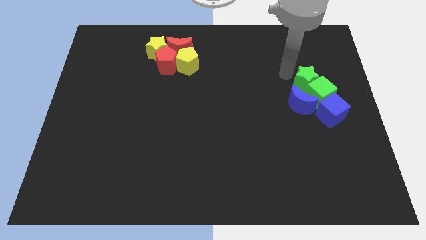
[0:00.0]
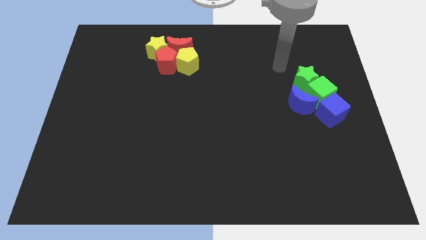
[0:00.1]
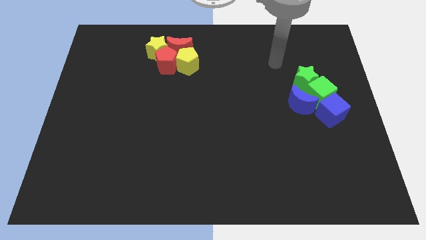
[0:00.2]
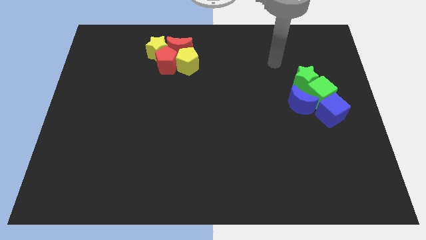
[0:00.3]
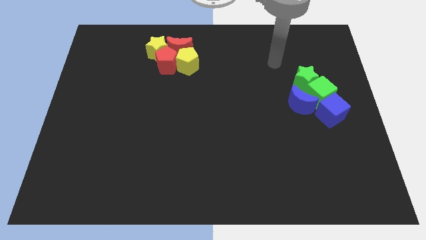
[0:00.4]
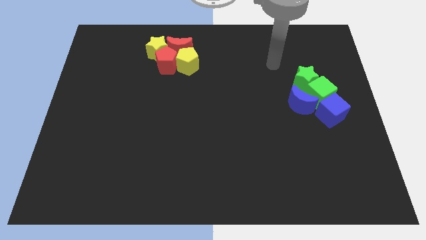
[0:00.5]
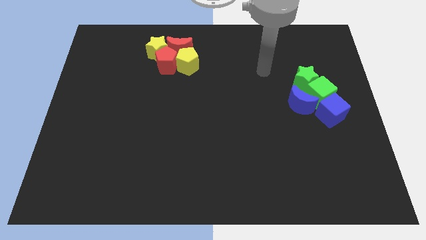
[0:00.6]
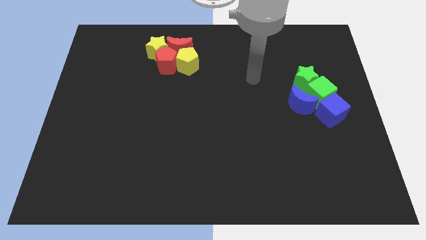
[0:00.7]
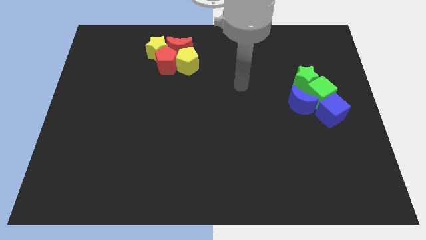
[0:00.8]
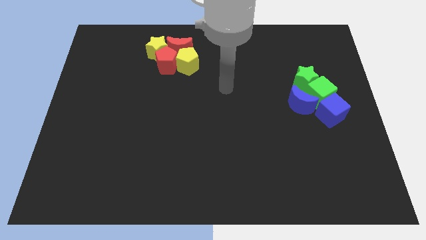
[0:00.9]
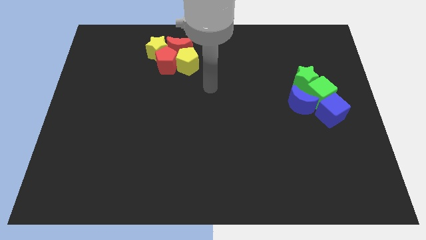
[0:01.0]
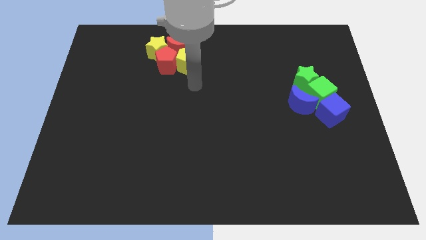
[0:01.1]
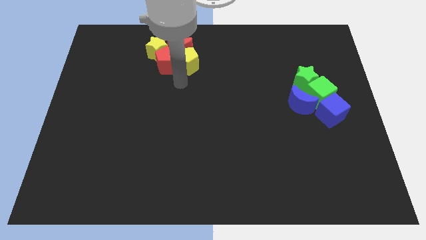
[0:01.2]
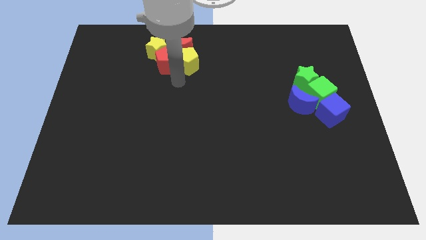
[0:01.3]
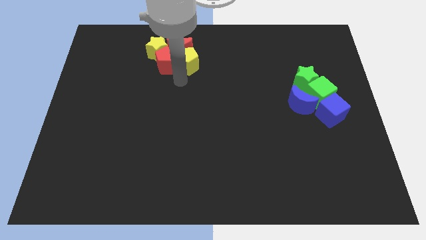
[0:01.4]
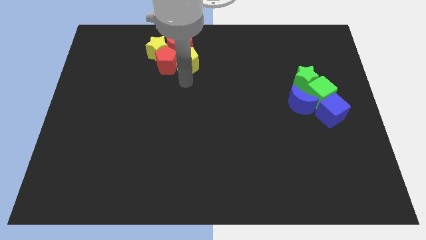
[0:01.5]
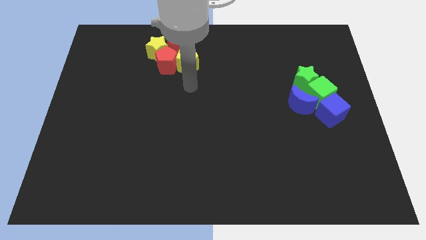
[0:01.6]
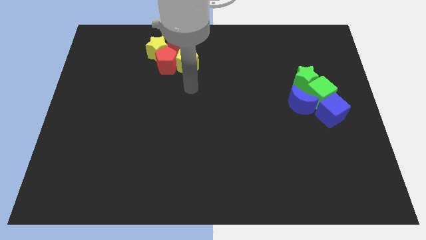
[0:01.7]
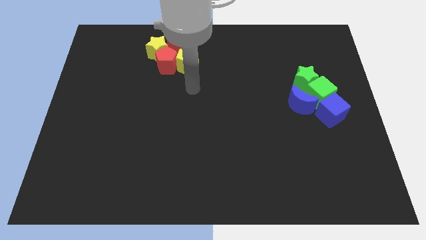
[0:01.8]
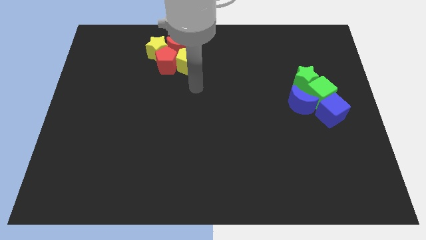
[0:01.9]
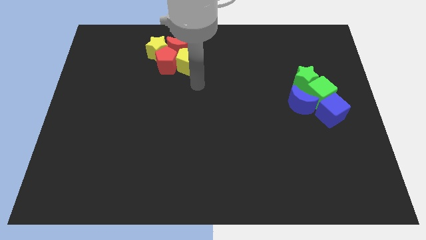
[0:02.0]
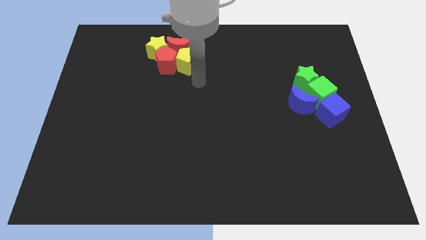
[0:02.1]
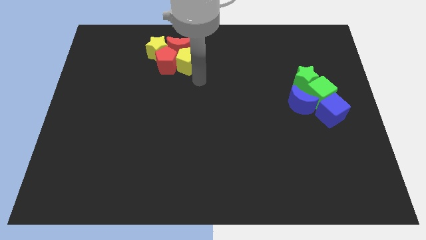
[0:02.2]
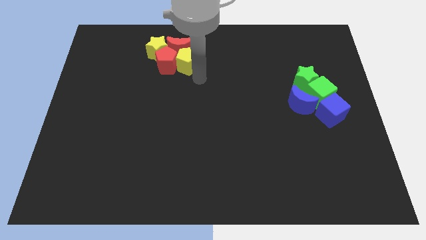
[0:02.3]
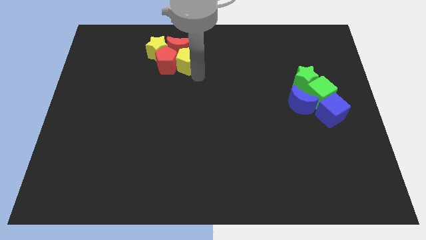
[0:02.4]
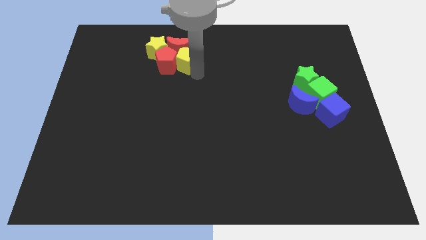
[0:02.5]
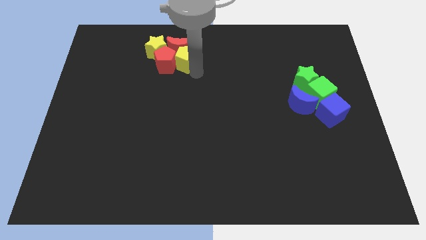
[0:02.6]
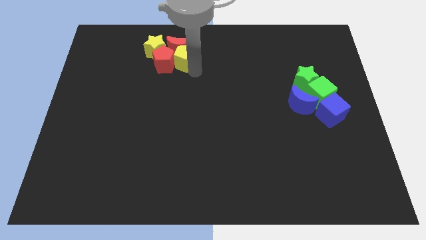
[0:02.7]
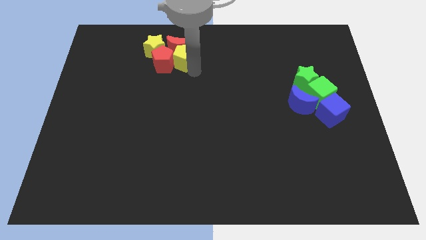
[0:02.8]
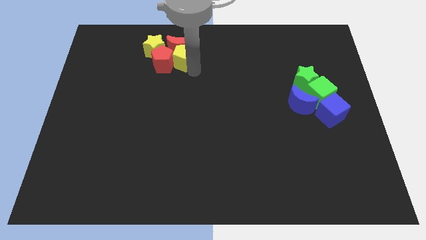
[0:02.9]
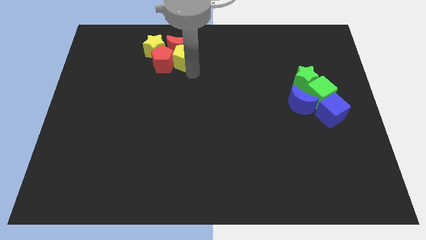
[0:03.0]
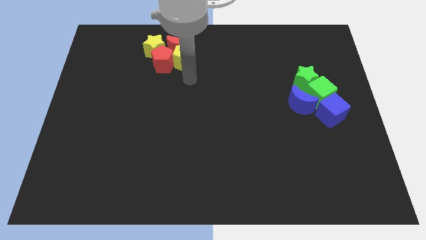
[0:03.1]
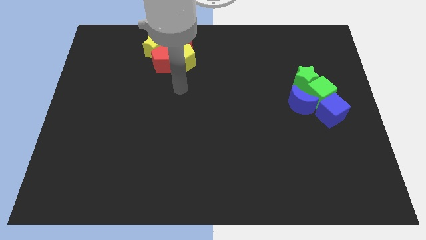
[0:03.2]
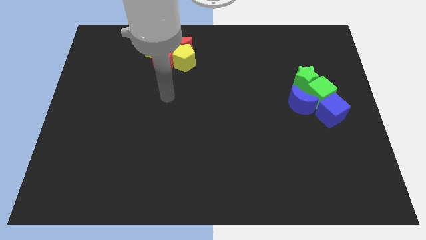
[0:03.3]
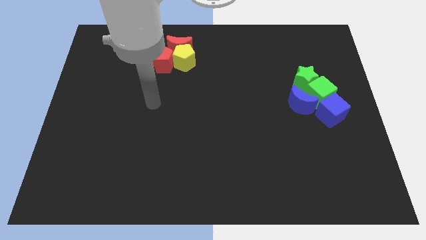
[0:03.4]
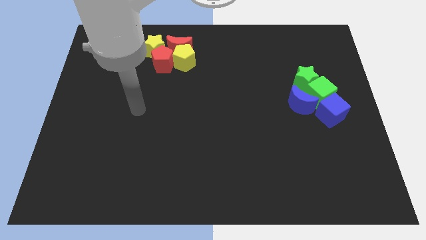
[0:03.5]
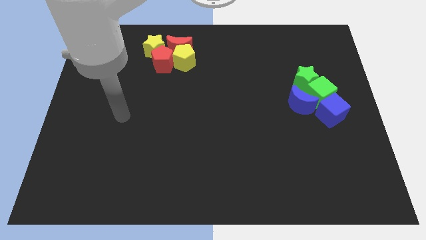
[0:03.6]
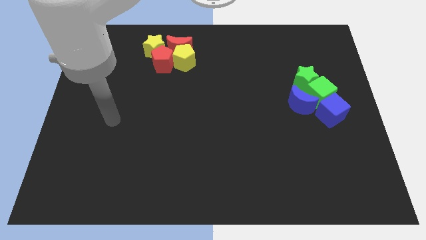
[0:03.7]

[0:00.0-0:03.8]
push the yellow pentagon into the red crescent

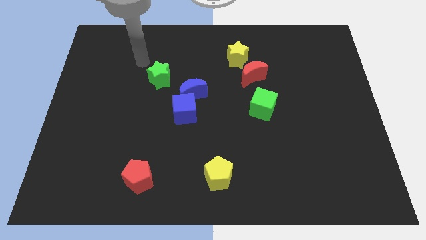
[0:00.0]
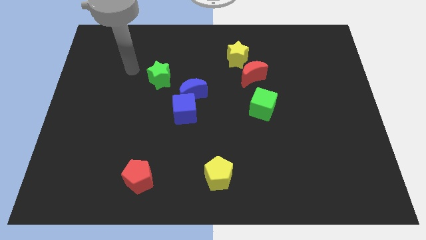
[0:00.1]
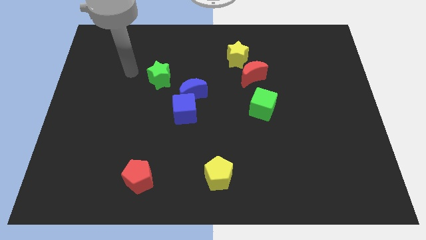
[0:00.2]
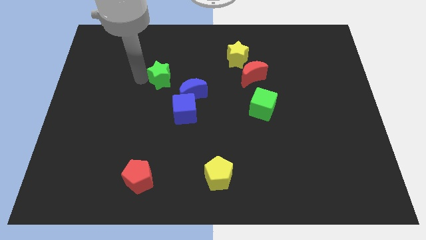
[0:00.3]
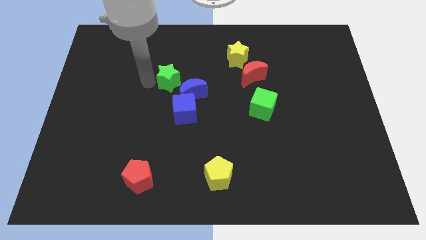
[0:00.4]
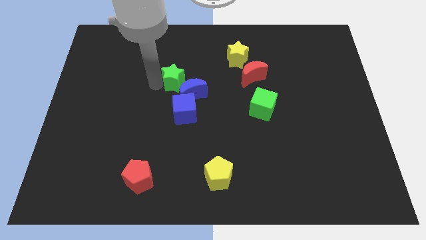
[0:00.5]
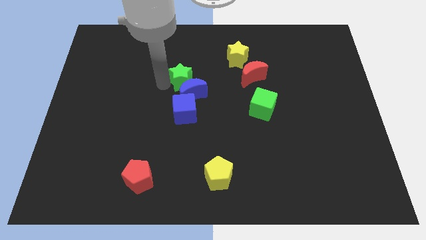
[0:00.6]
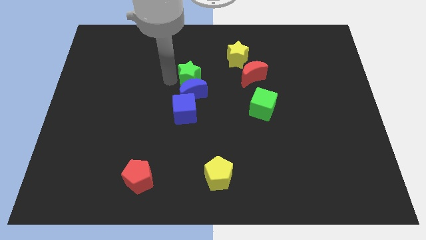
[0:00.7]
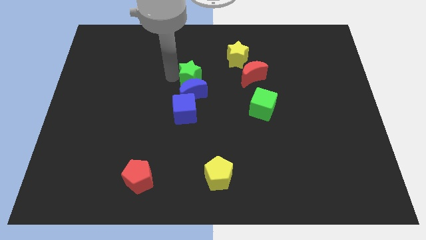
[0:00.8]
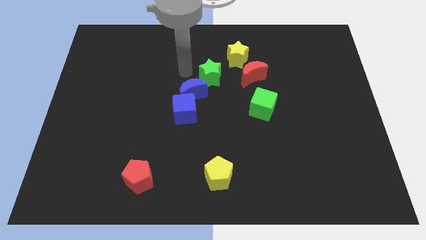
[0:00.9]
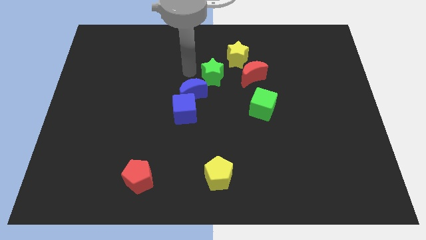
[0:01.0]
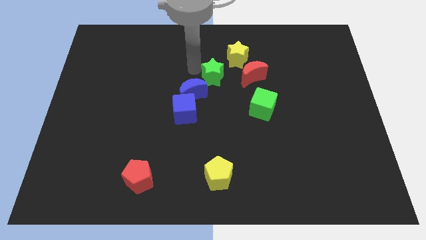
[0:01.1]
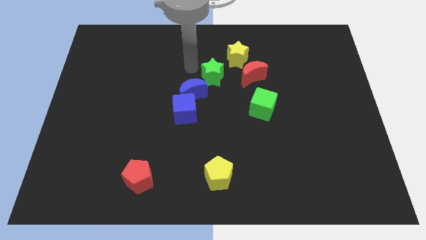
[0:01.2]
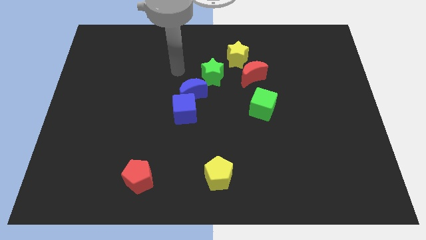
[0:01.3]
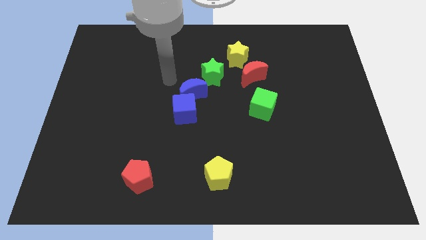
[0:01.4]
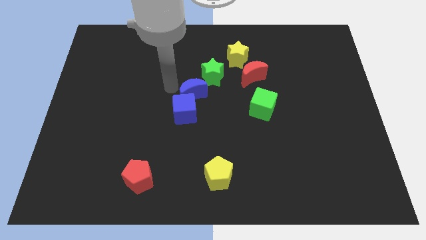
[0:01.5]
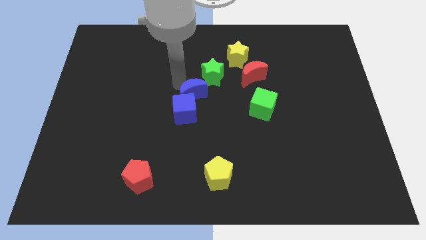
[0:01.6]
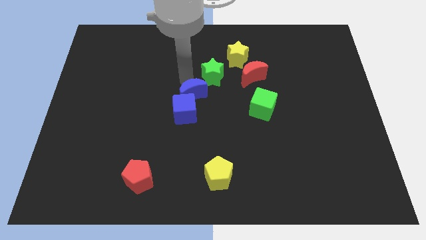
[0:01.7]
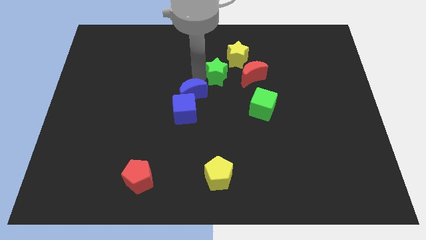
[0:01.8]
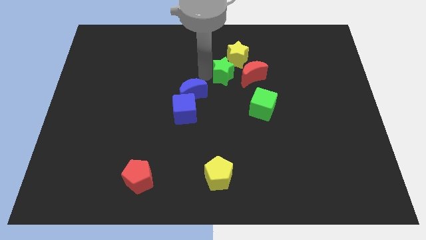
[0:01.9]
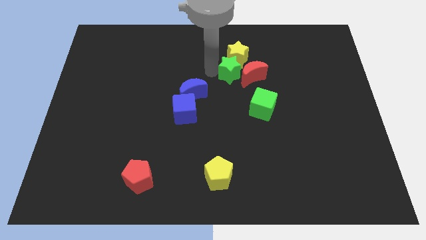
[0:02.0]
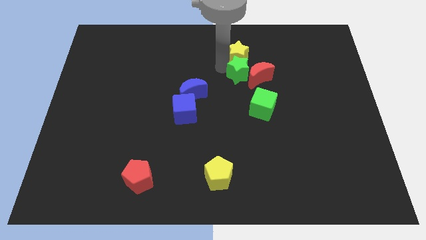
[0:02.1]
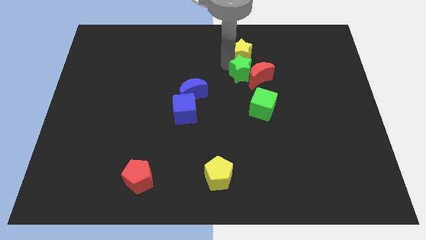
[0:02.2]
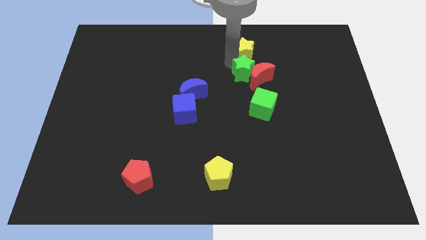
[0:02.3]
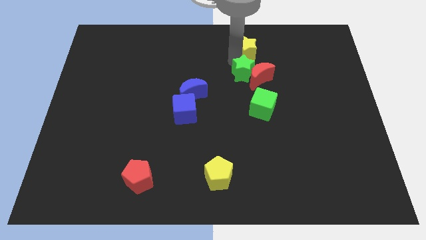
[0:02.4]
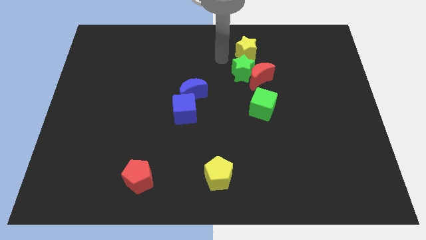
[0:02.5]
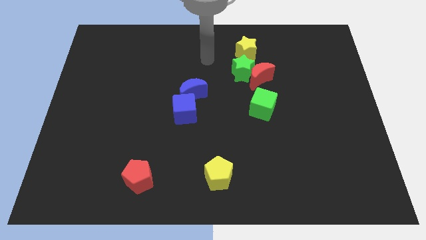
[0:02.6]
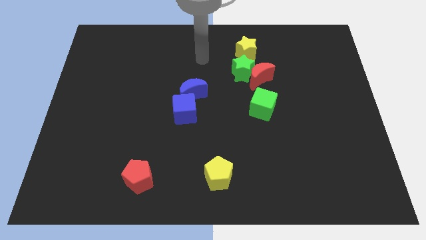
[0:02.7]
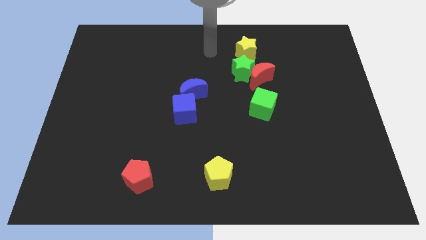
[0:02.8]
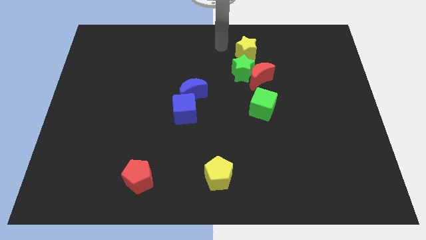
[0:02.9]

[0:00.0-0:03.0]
move green star below the yellow star

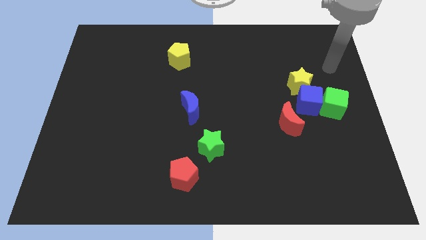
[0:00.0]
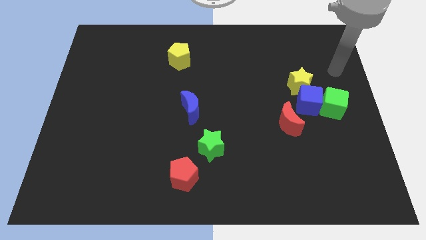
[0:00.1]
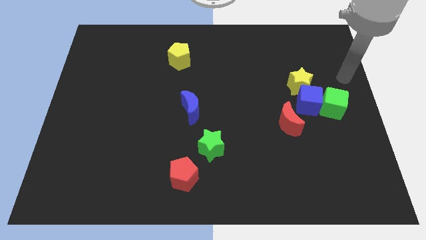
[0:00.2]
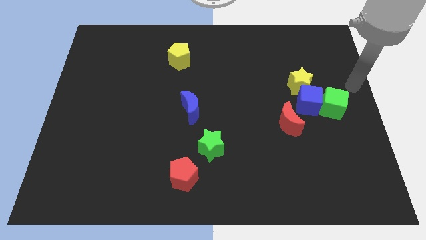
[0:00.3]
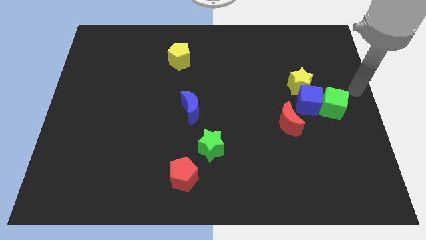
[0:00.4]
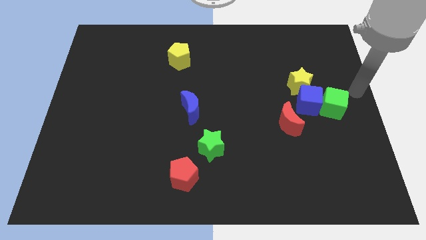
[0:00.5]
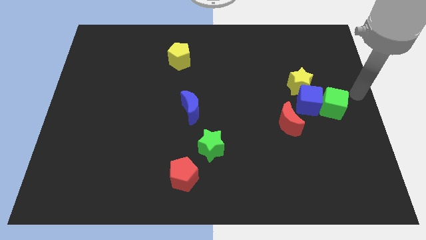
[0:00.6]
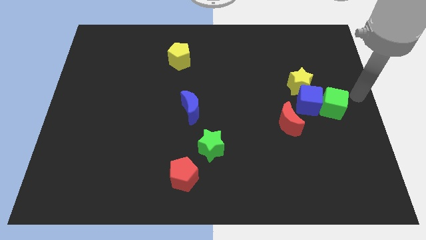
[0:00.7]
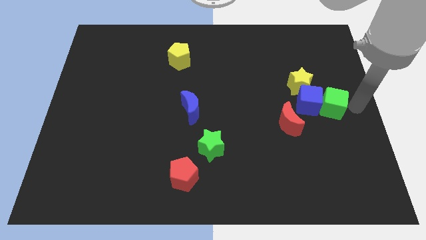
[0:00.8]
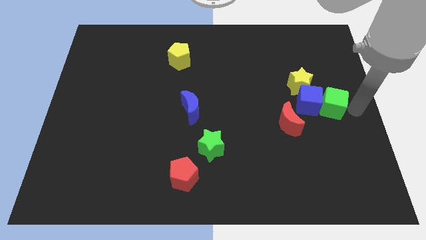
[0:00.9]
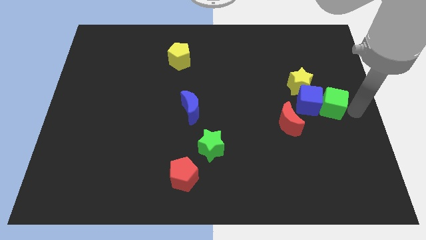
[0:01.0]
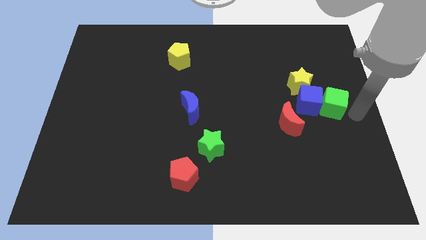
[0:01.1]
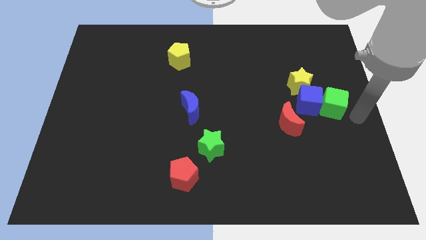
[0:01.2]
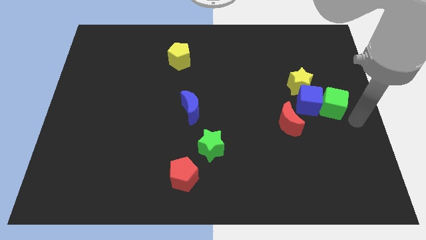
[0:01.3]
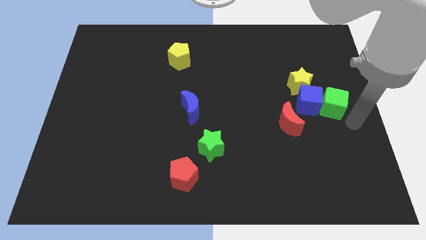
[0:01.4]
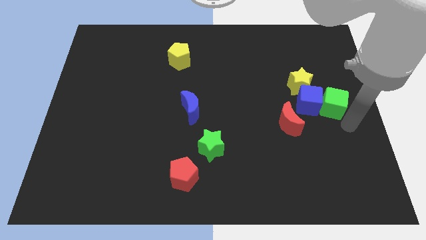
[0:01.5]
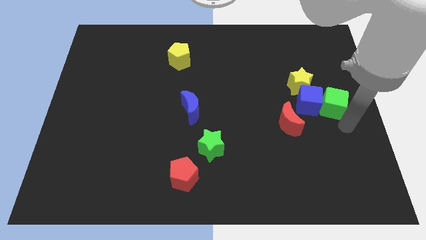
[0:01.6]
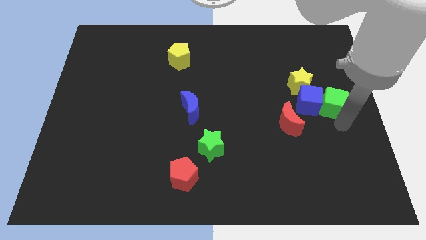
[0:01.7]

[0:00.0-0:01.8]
move the arm towards the green cube

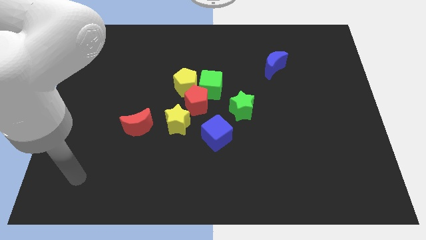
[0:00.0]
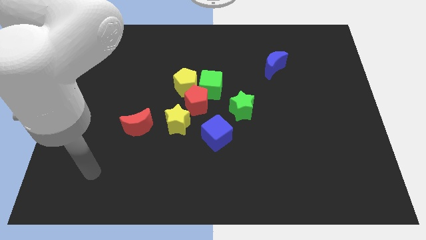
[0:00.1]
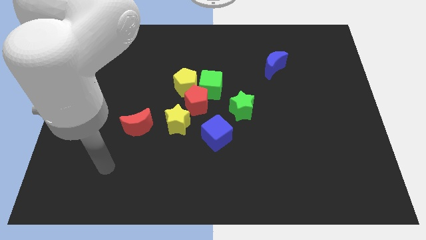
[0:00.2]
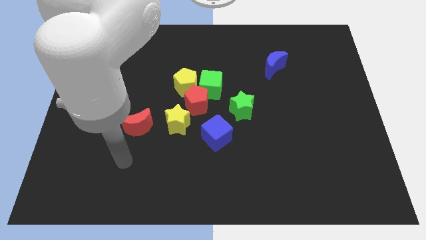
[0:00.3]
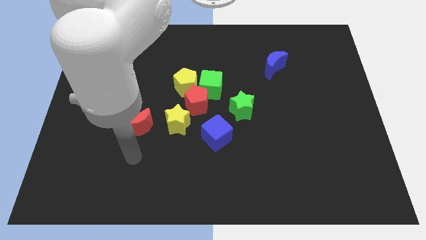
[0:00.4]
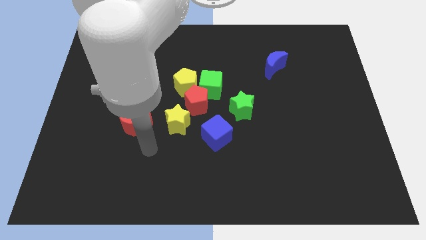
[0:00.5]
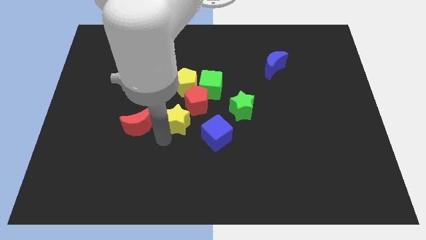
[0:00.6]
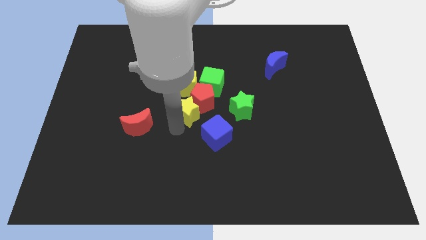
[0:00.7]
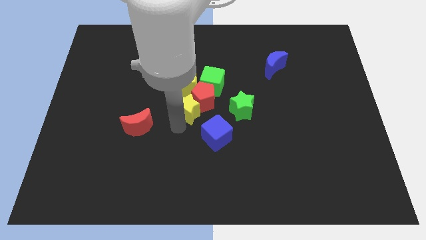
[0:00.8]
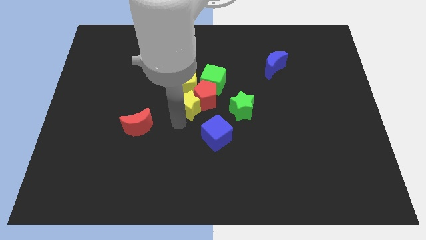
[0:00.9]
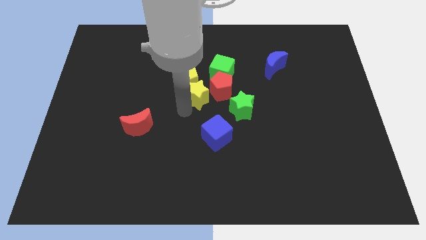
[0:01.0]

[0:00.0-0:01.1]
place the arm diagonally to the yellow star
